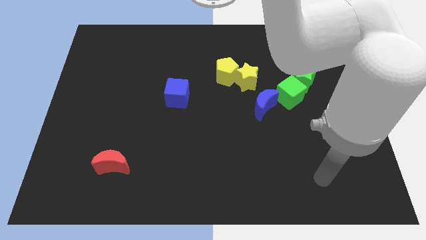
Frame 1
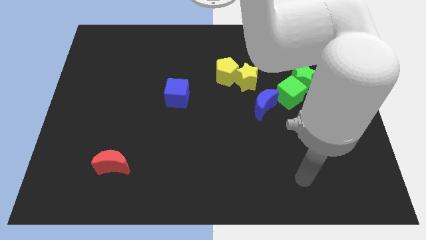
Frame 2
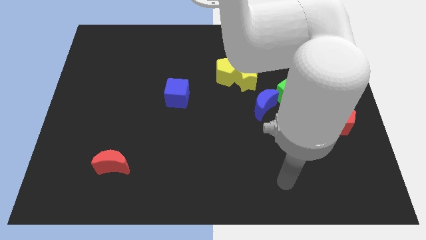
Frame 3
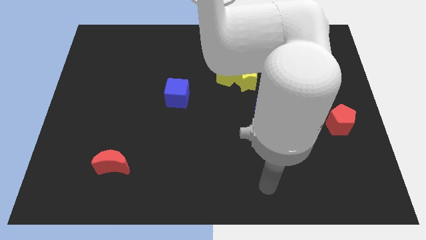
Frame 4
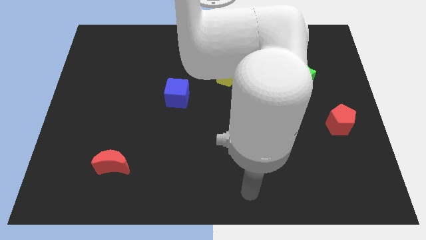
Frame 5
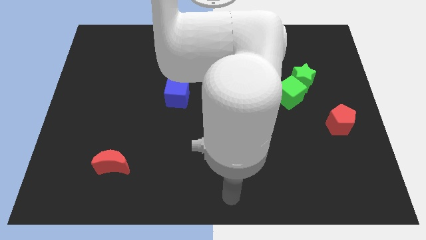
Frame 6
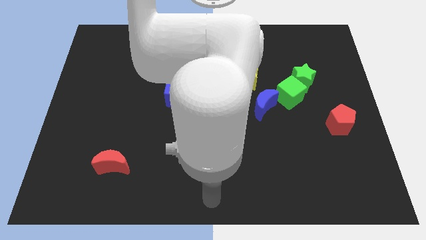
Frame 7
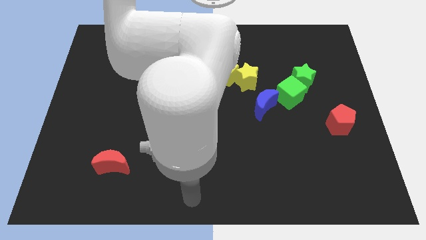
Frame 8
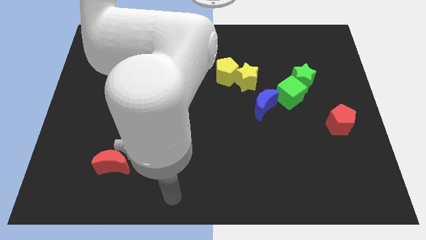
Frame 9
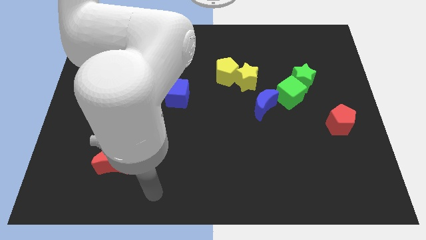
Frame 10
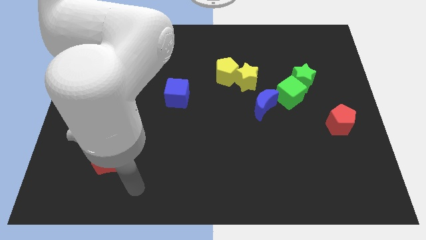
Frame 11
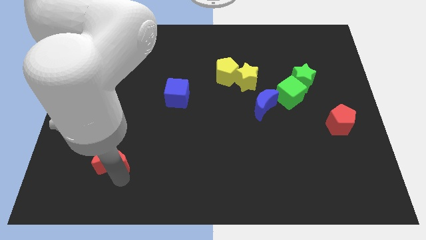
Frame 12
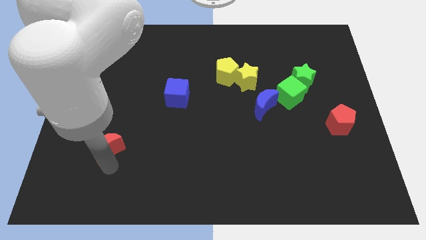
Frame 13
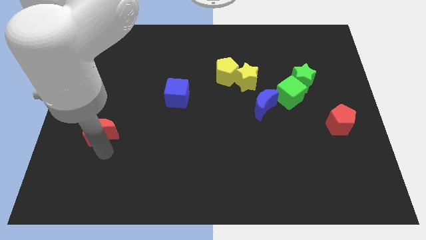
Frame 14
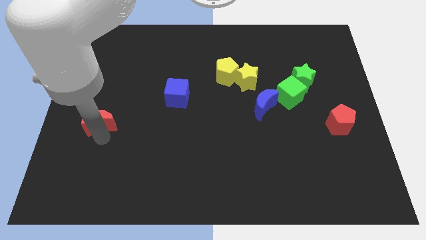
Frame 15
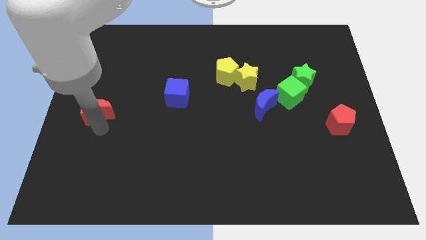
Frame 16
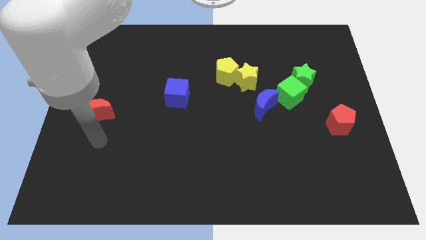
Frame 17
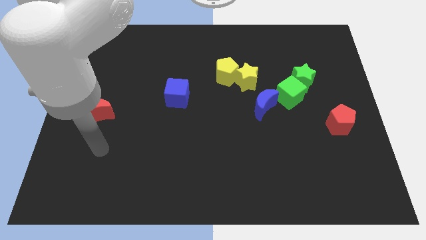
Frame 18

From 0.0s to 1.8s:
push the red moon towards the center left corner of the board

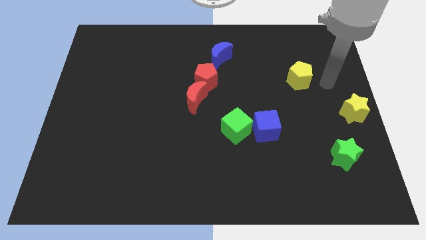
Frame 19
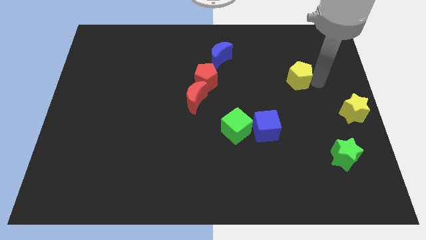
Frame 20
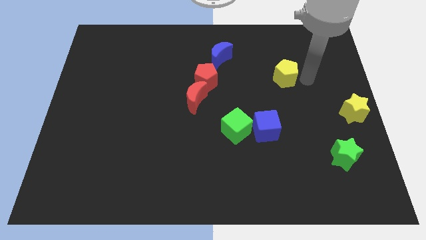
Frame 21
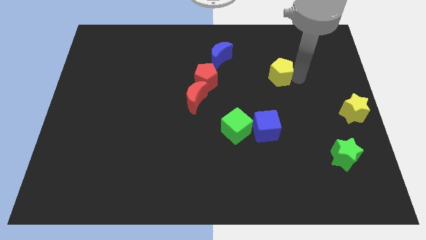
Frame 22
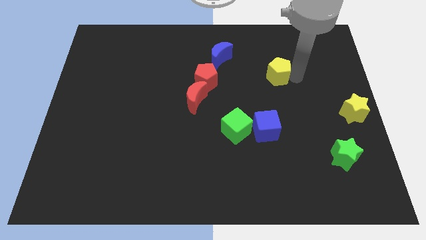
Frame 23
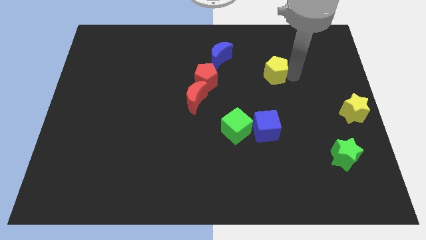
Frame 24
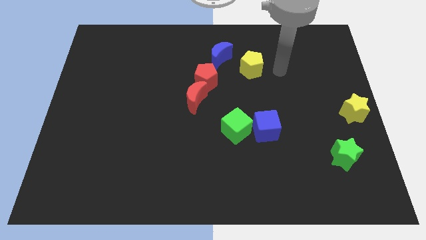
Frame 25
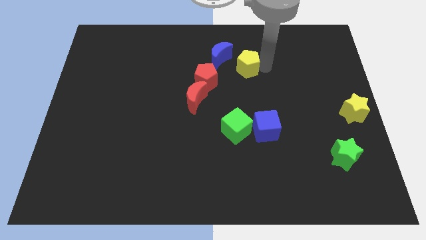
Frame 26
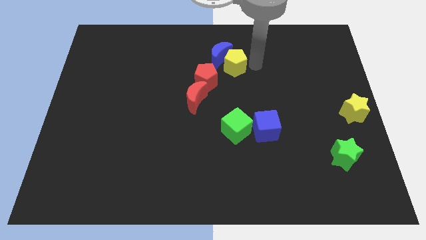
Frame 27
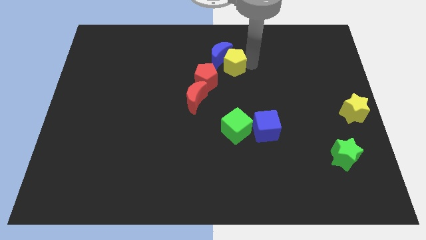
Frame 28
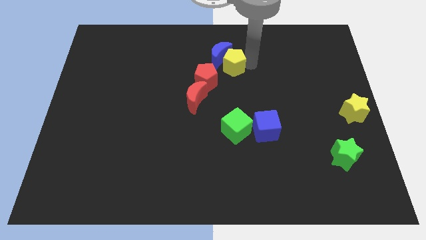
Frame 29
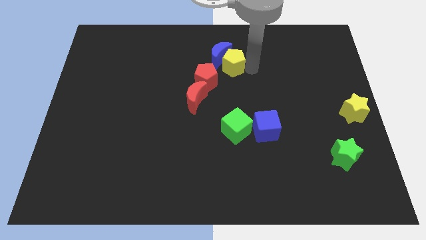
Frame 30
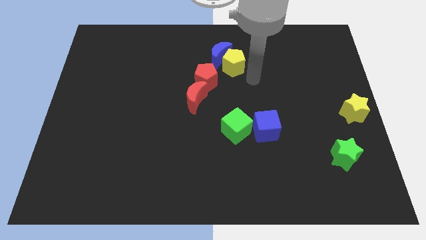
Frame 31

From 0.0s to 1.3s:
make the yellow pentagon touch the right side of the blue moon

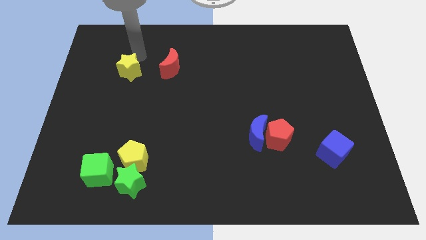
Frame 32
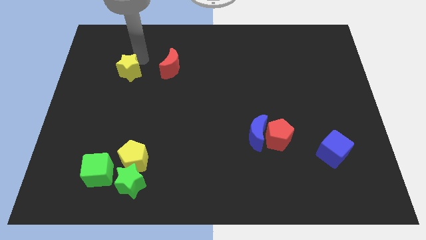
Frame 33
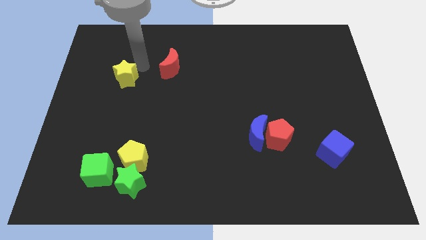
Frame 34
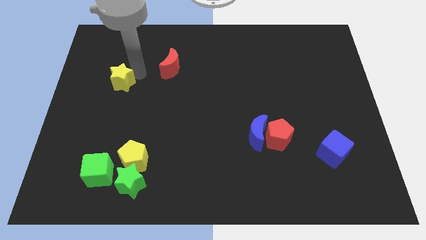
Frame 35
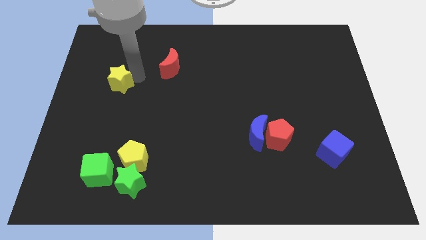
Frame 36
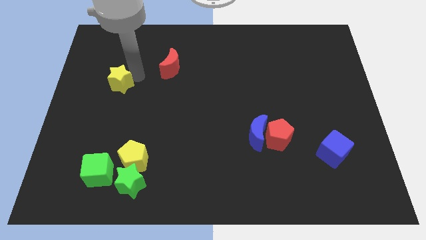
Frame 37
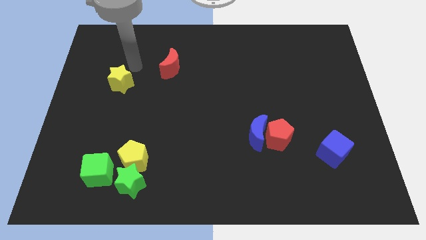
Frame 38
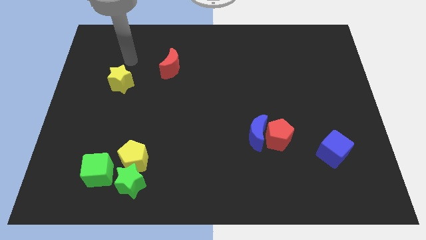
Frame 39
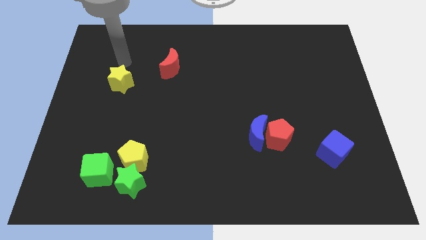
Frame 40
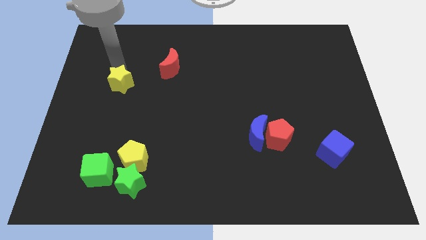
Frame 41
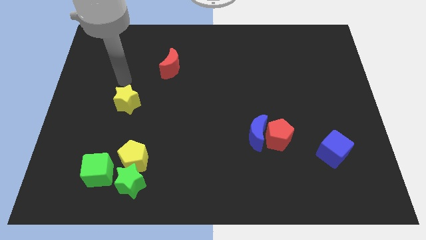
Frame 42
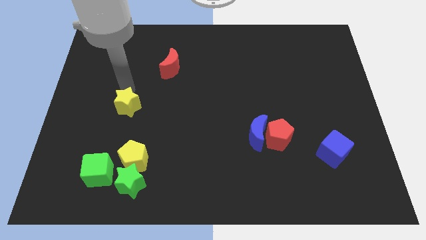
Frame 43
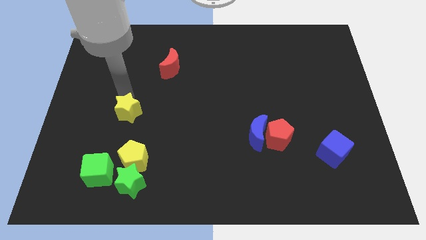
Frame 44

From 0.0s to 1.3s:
push the yellow star towards the yellow pentagon

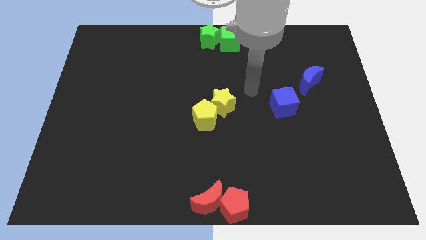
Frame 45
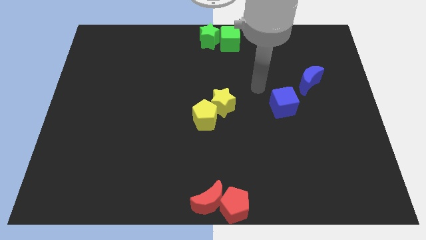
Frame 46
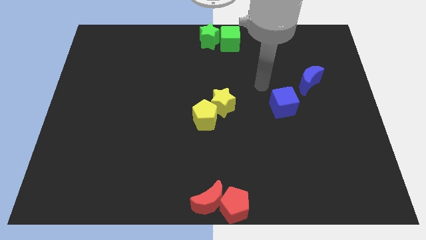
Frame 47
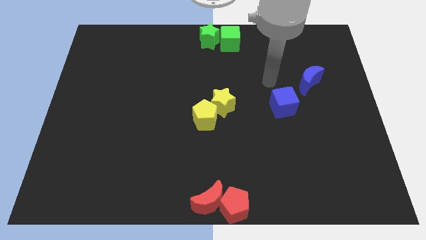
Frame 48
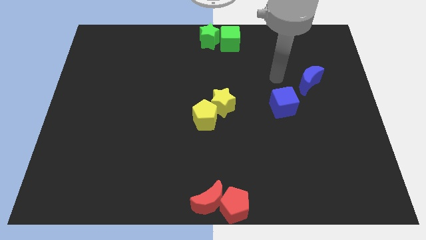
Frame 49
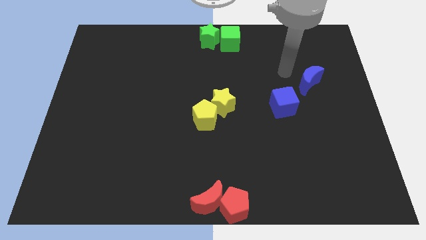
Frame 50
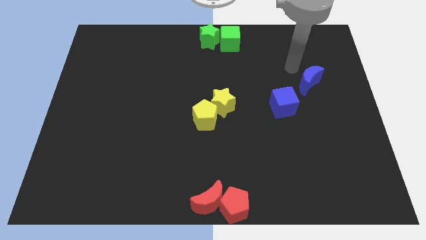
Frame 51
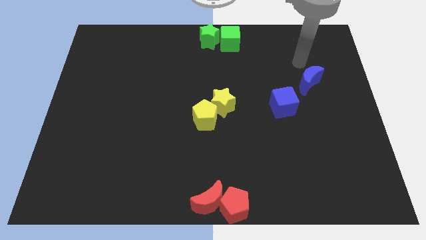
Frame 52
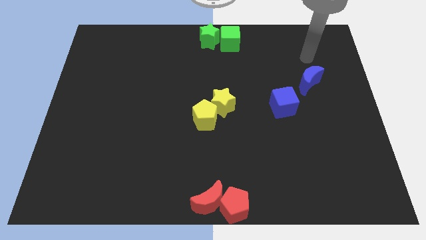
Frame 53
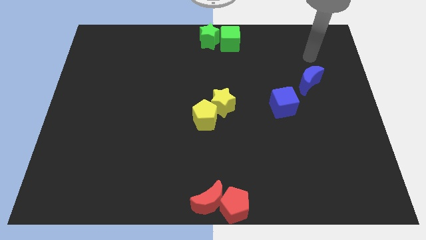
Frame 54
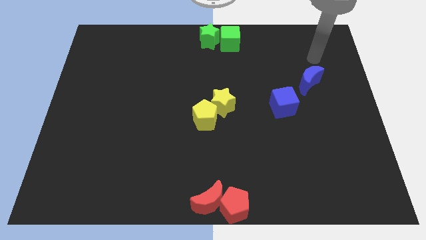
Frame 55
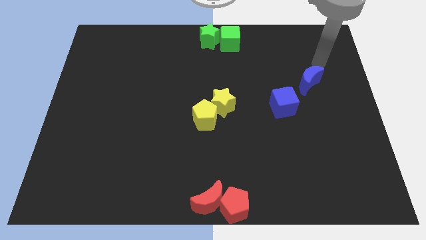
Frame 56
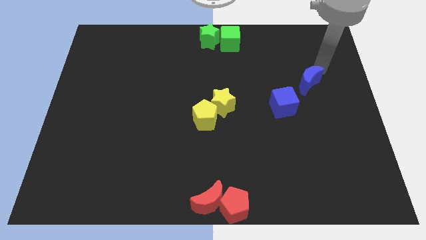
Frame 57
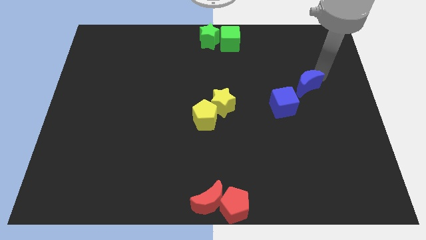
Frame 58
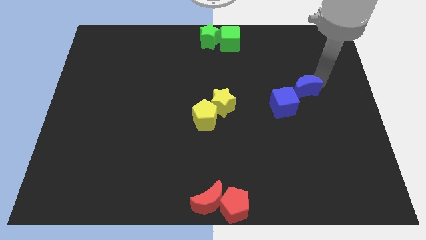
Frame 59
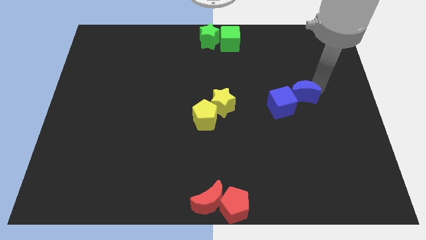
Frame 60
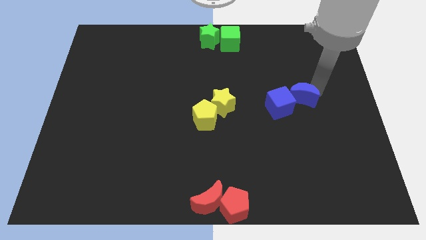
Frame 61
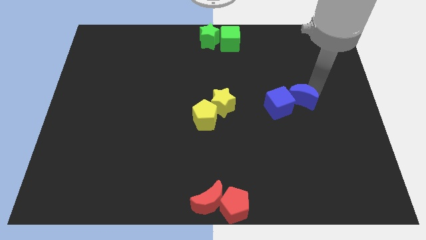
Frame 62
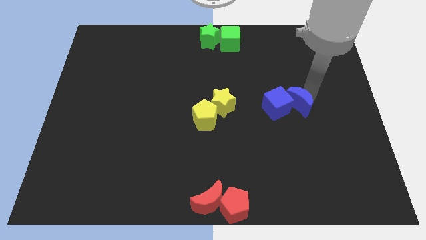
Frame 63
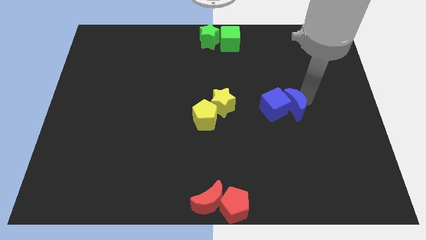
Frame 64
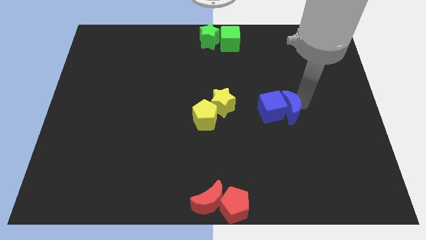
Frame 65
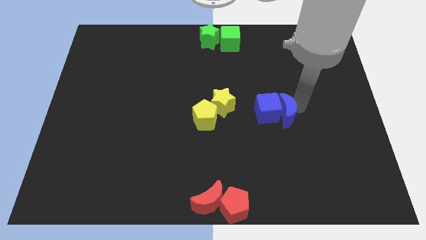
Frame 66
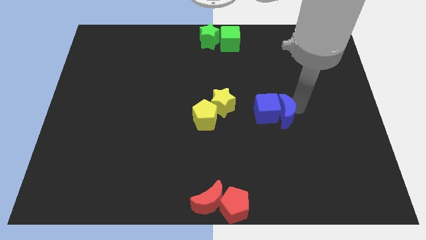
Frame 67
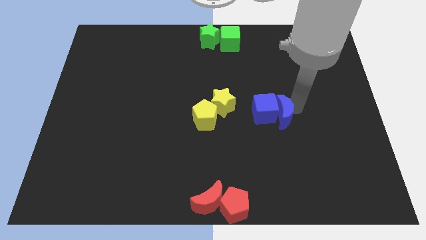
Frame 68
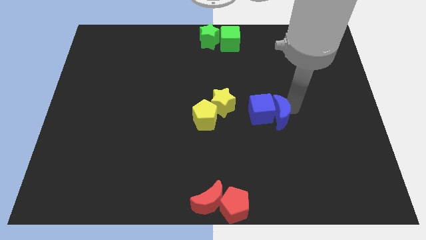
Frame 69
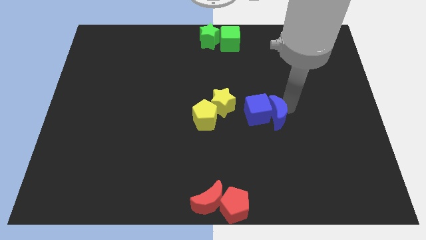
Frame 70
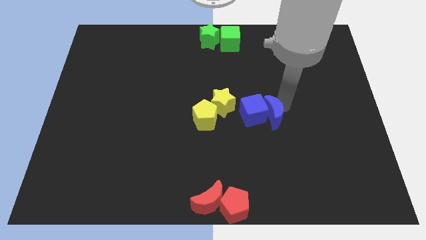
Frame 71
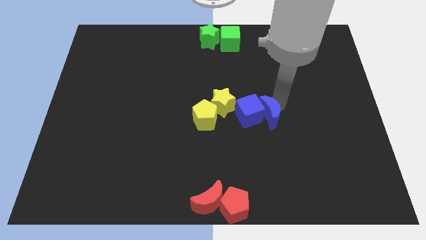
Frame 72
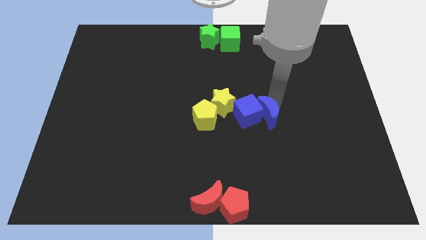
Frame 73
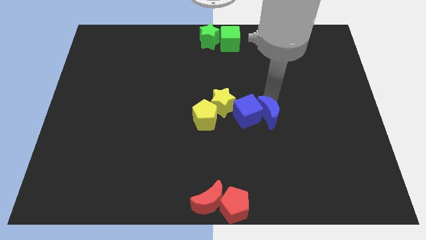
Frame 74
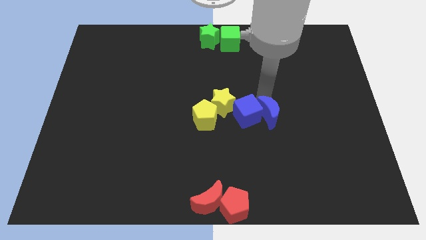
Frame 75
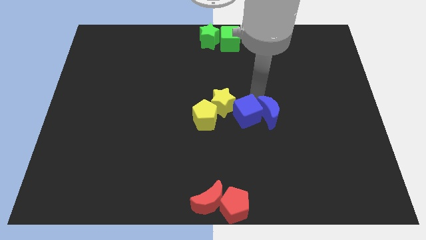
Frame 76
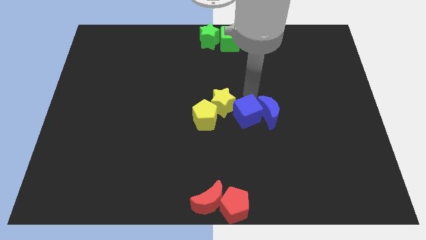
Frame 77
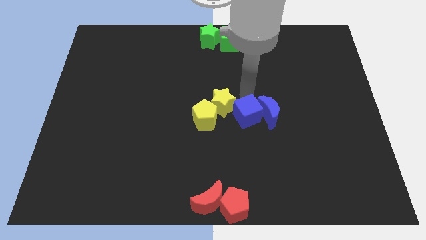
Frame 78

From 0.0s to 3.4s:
move blue blocks to right of the yellow blocks

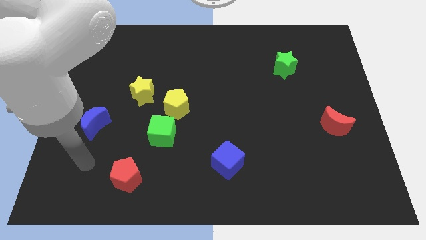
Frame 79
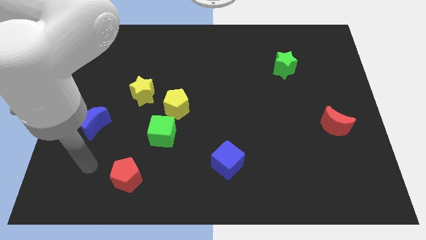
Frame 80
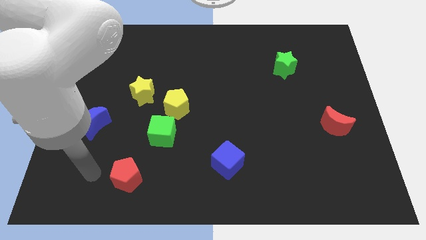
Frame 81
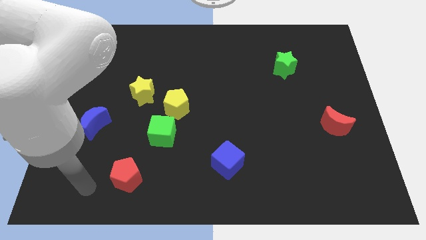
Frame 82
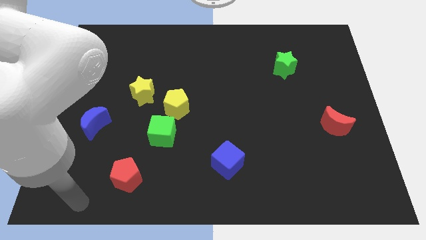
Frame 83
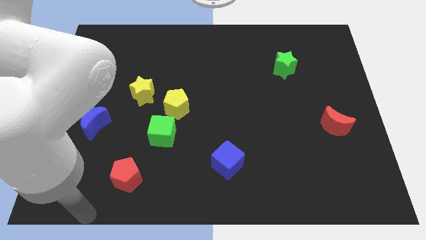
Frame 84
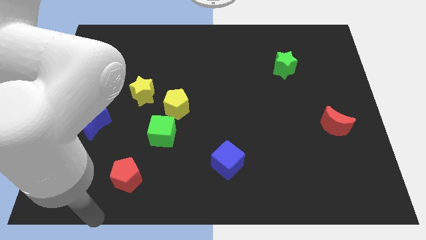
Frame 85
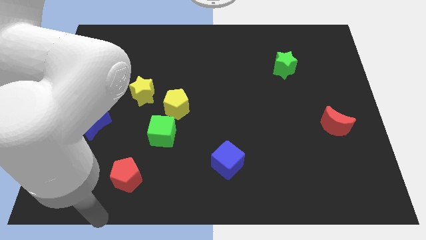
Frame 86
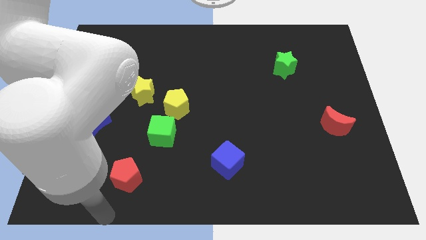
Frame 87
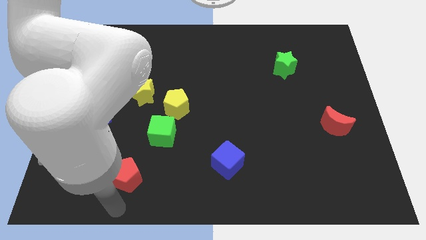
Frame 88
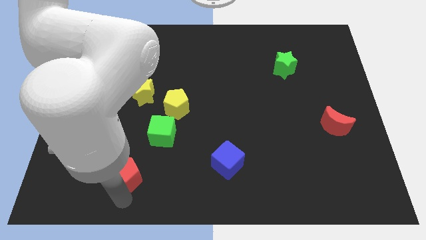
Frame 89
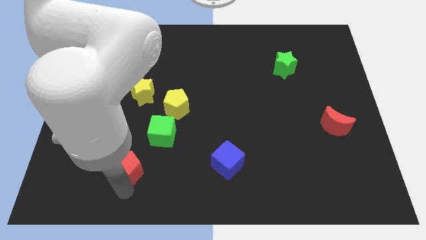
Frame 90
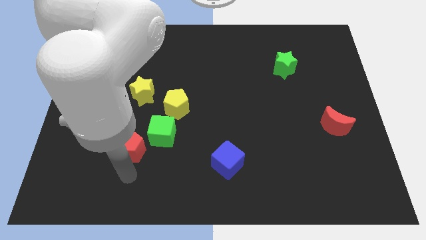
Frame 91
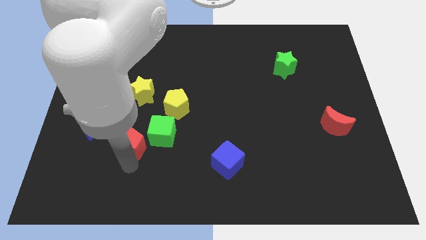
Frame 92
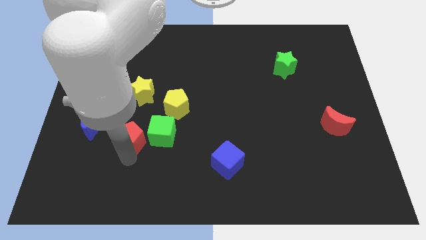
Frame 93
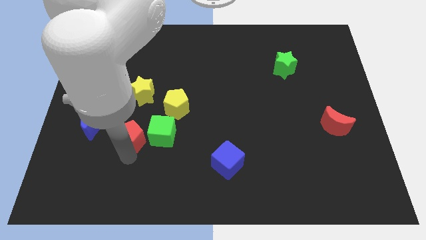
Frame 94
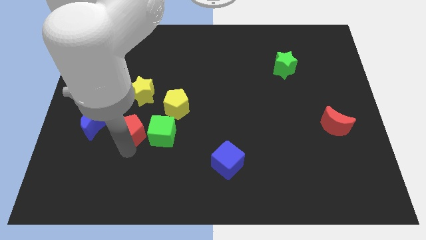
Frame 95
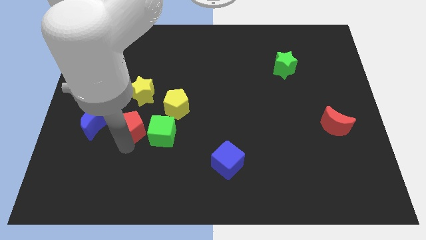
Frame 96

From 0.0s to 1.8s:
push the red pentagon slightly upwards
